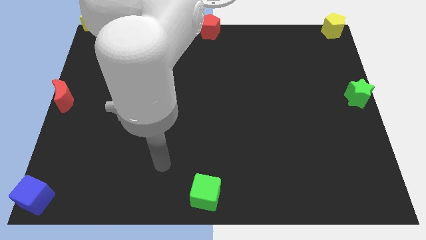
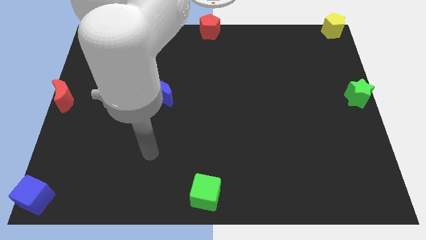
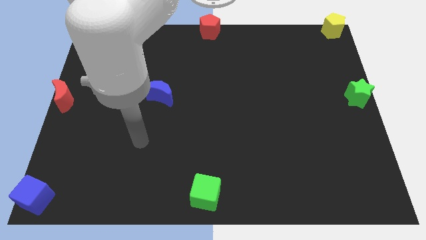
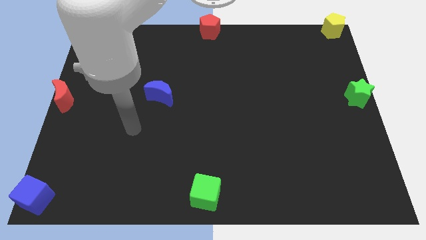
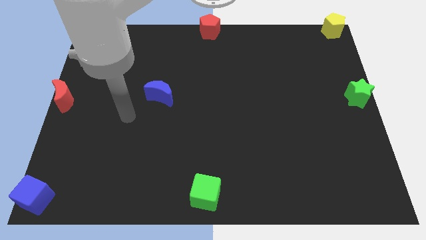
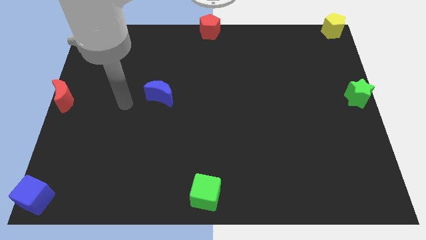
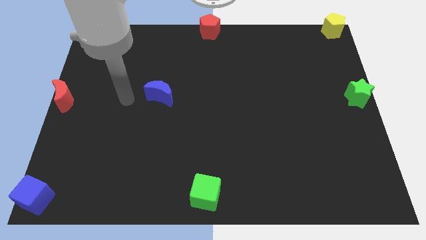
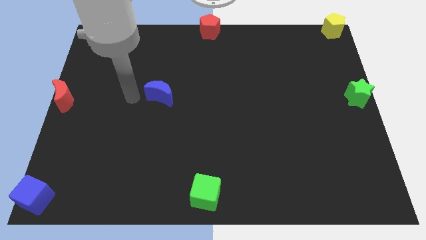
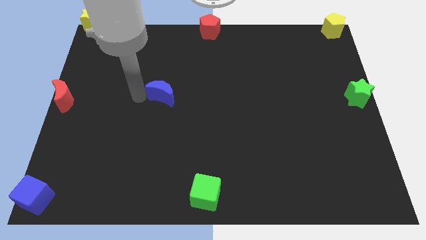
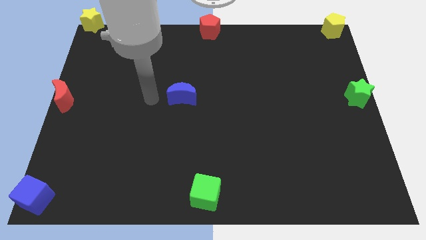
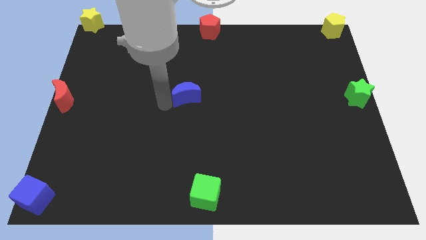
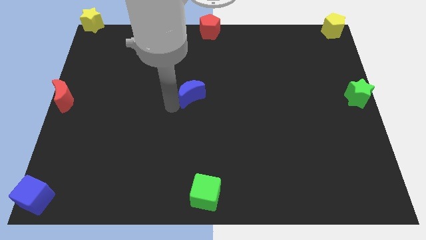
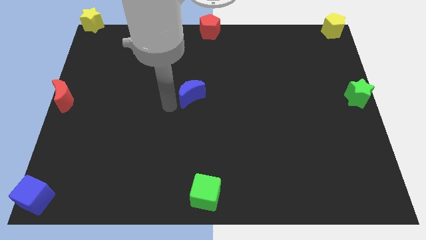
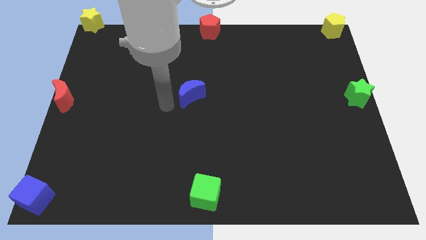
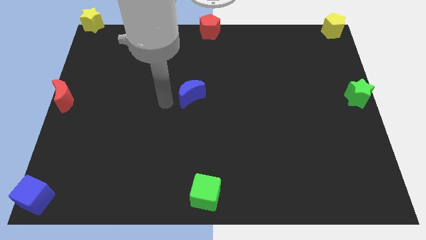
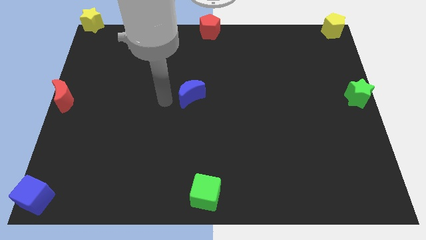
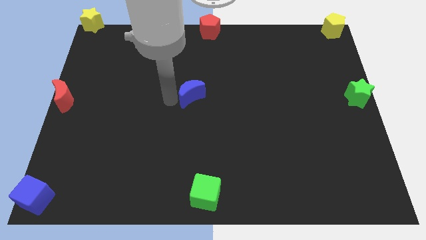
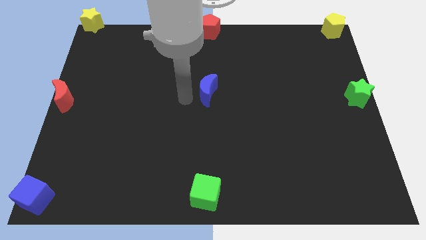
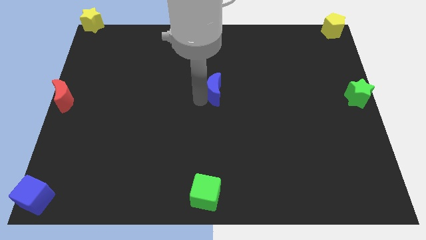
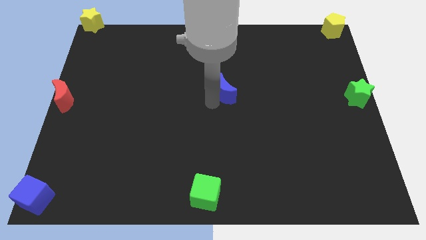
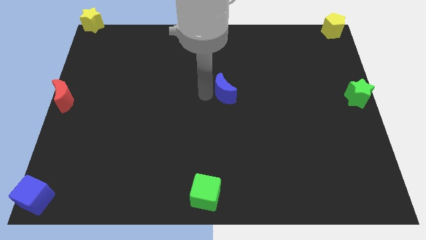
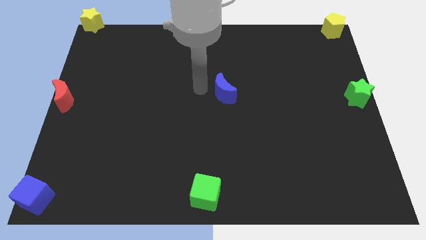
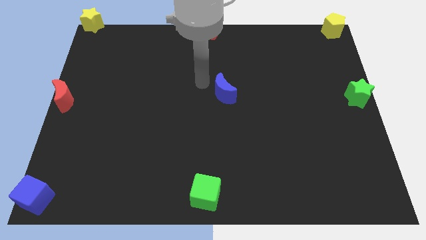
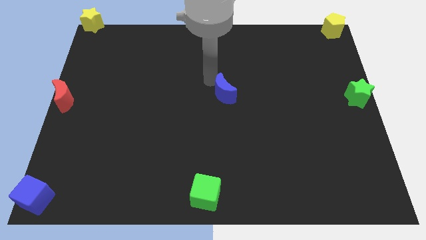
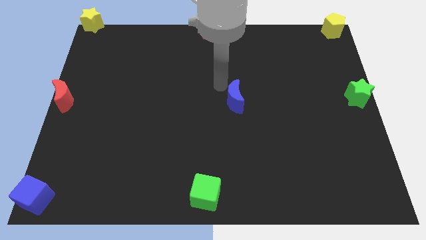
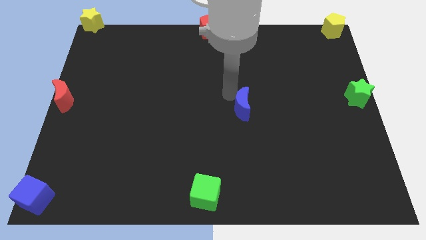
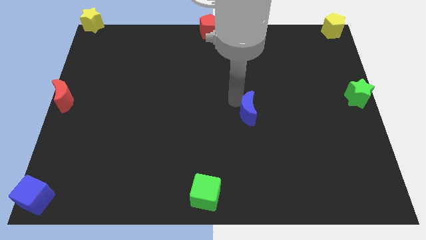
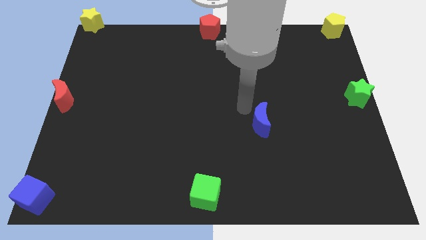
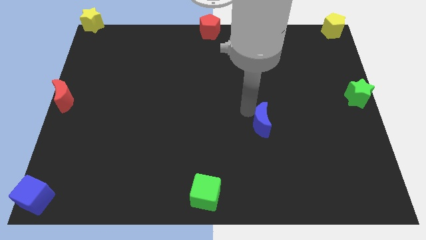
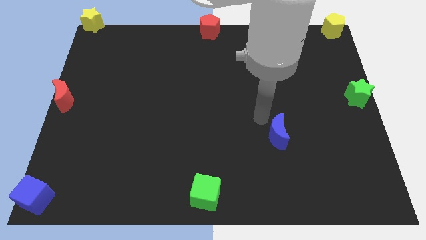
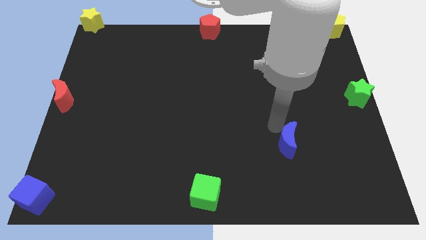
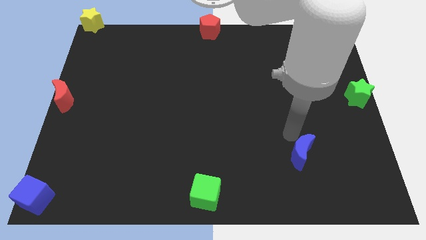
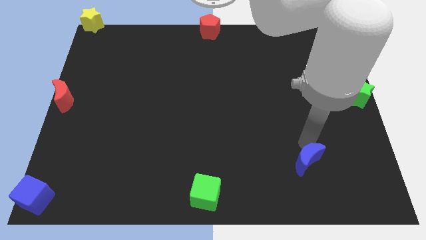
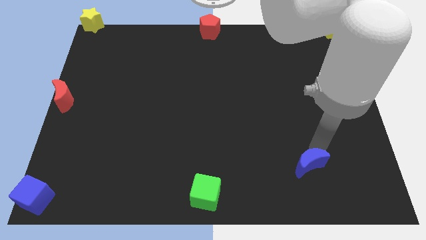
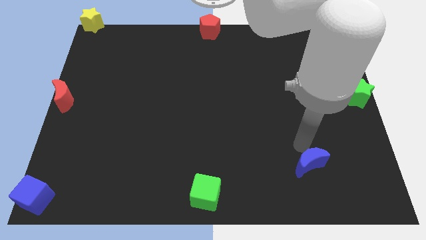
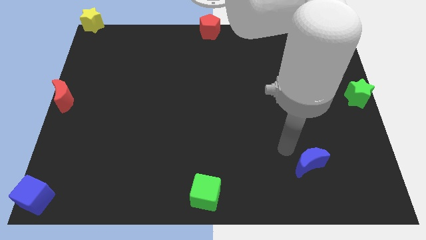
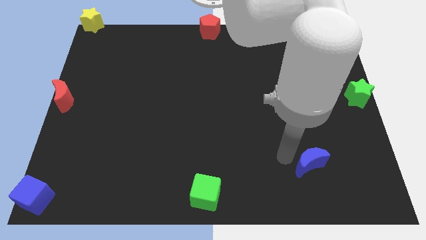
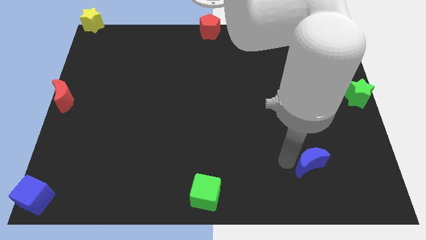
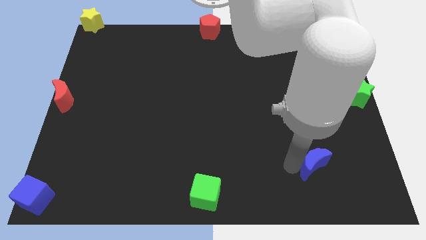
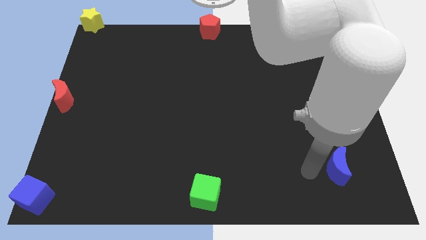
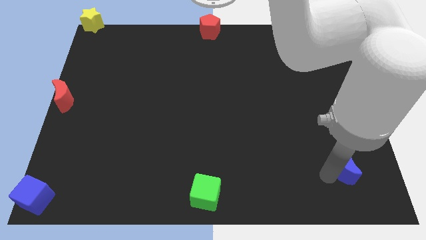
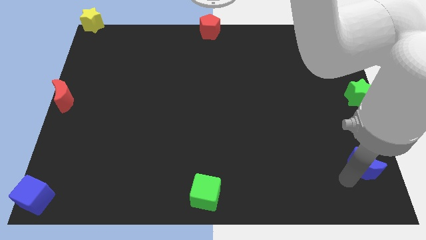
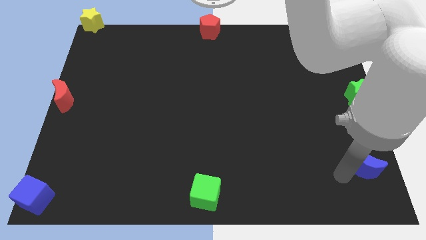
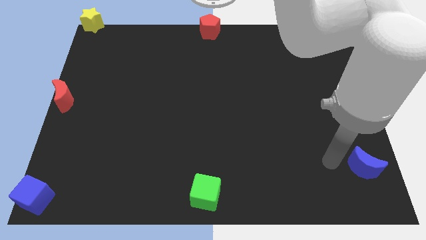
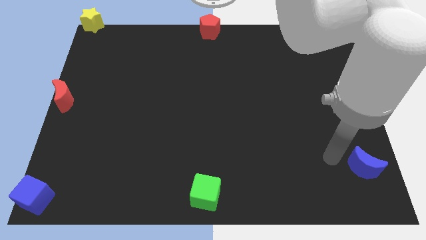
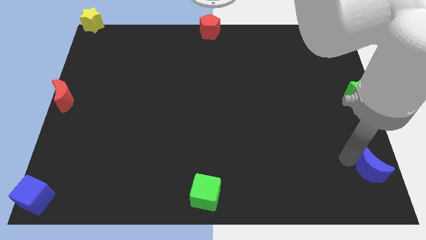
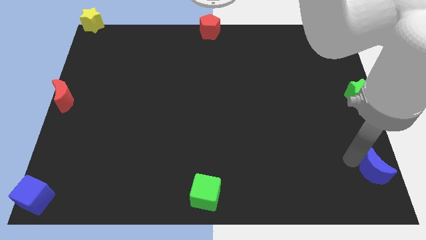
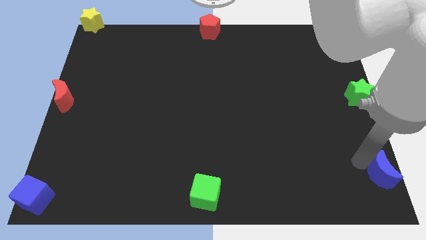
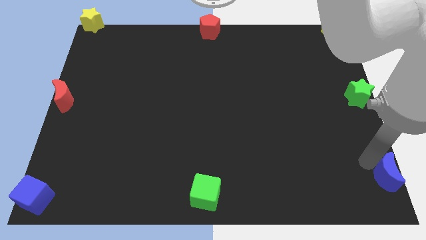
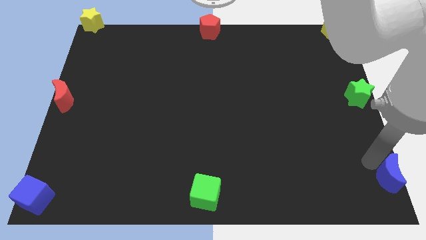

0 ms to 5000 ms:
move the blue crescent to the bottom right of the board

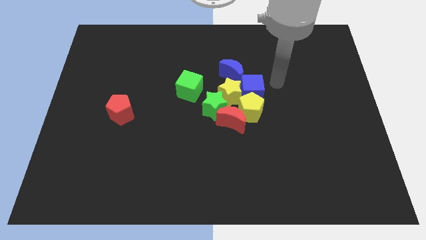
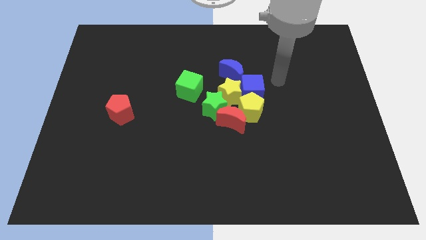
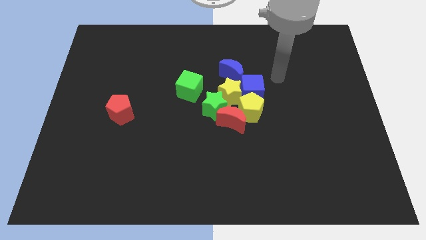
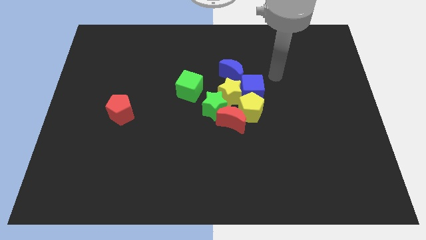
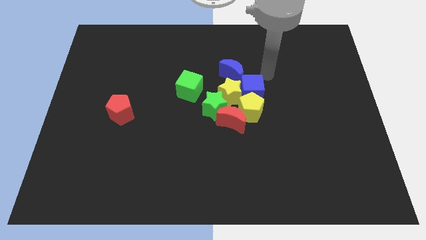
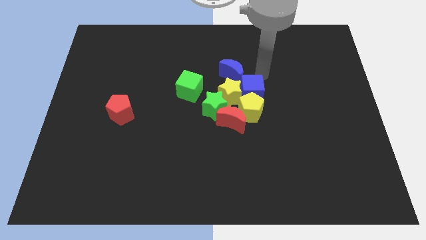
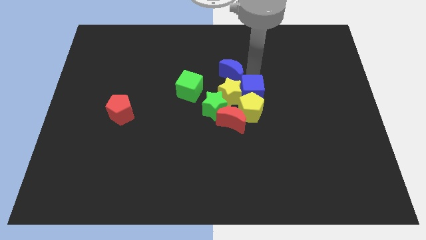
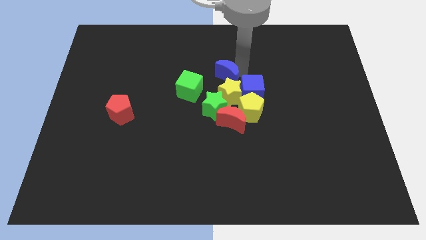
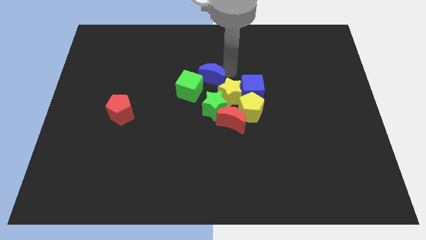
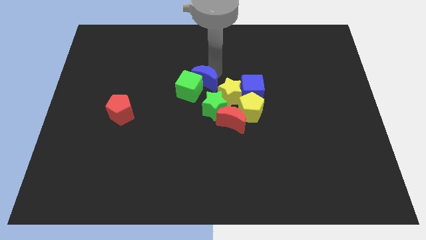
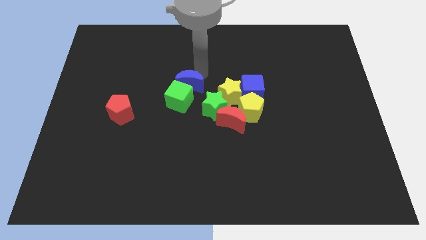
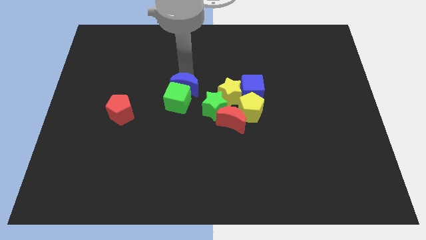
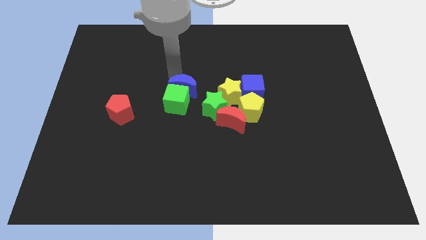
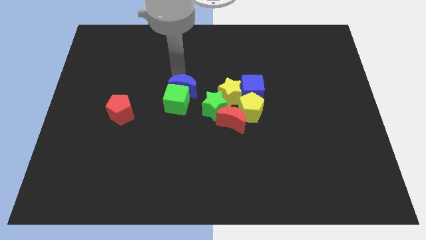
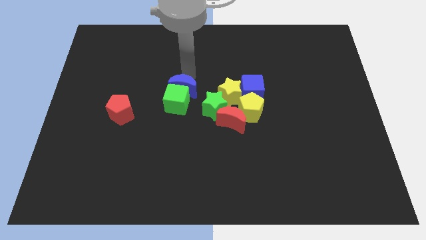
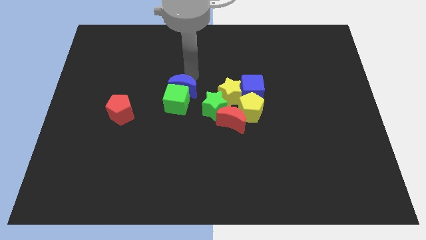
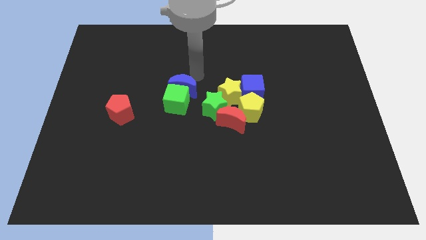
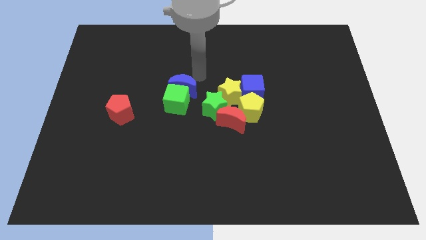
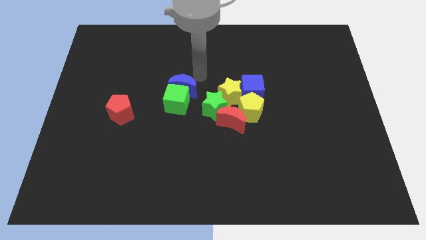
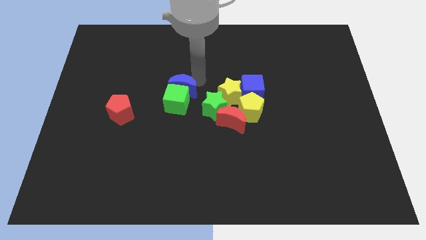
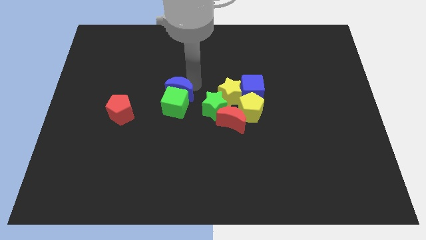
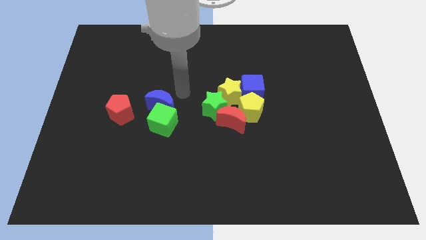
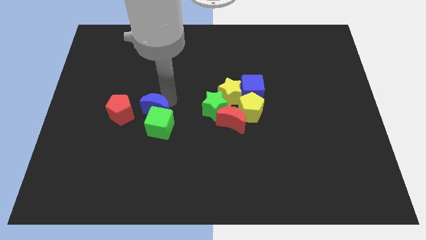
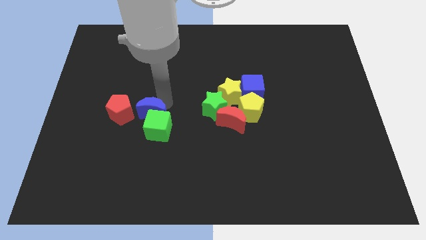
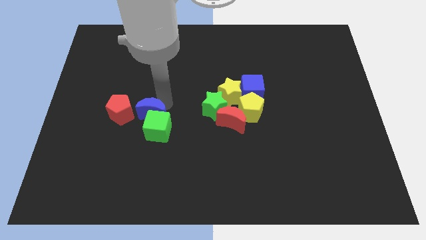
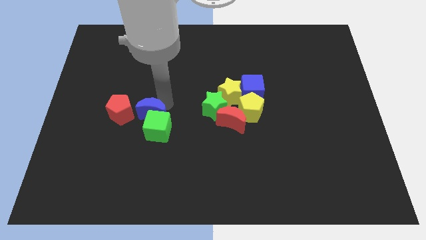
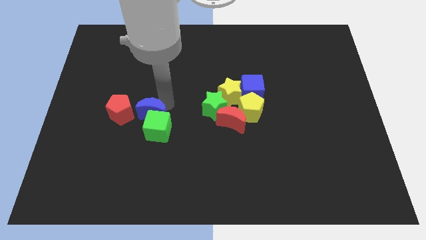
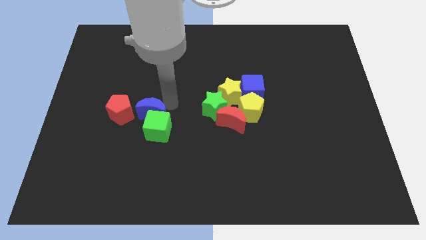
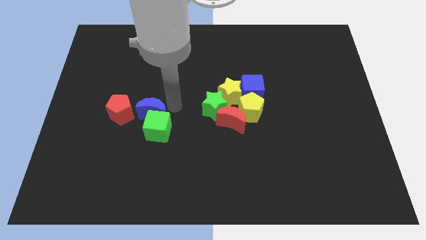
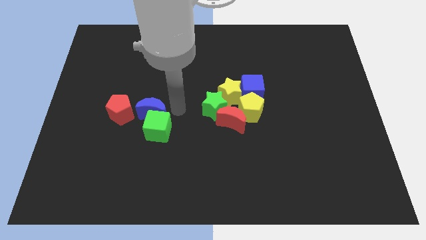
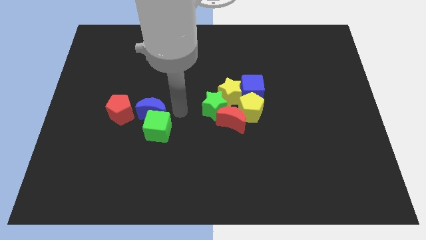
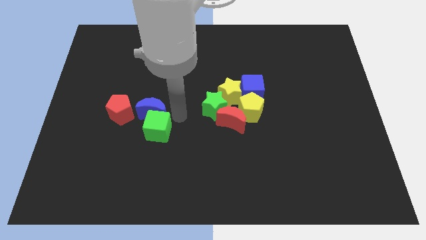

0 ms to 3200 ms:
move the blue moon into green cube

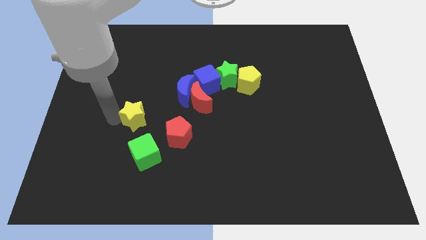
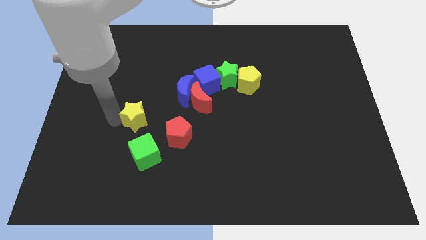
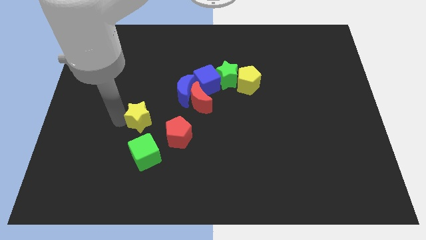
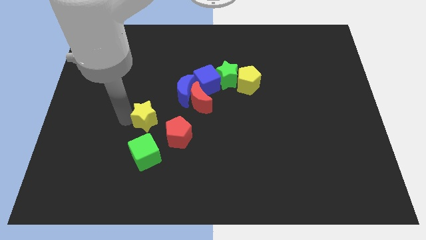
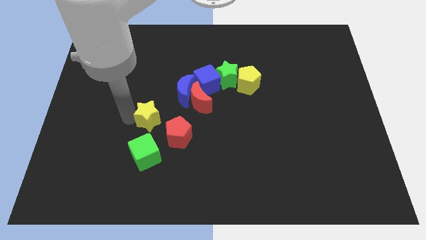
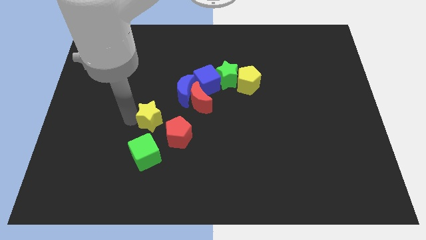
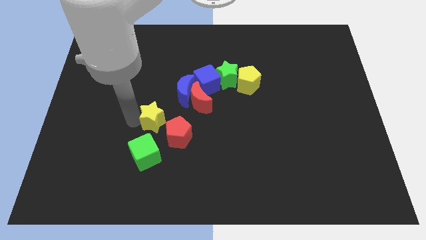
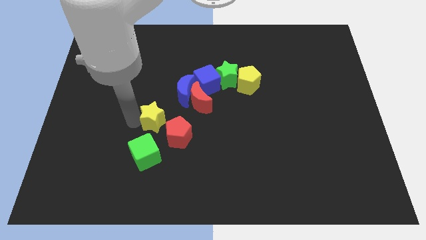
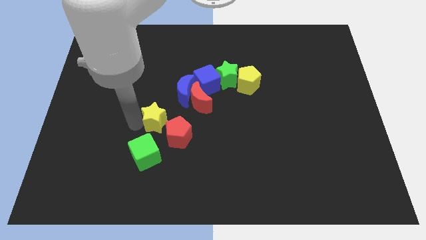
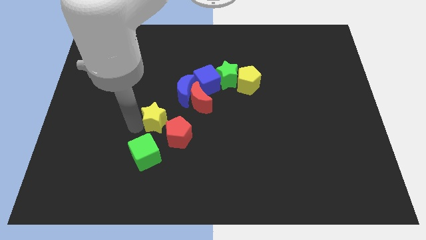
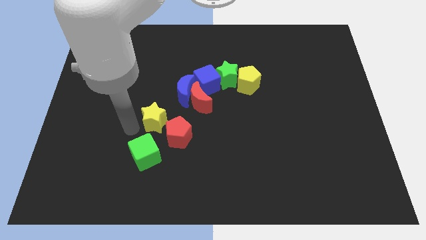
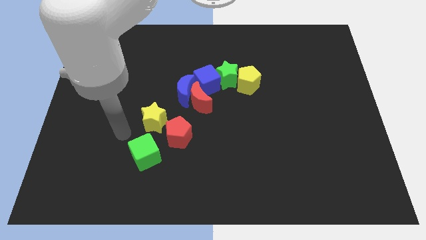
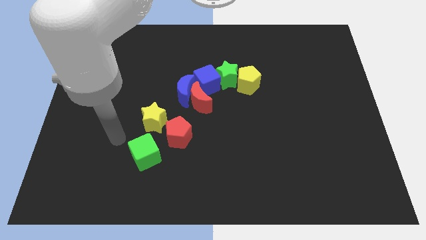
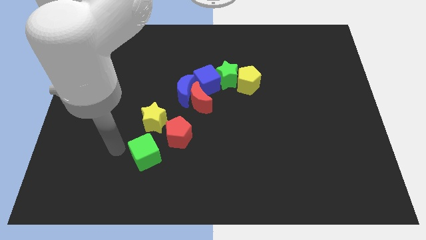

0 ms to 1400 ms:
move the yellow star slightly to the right
